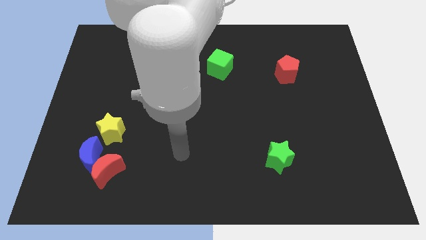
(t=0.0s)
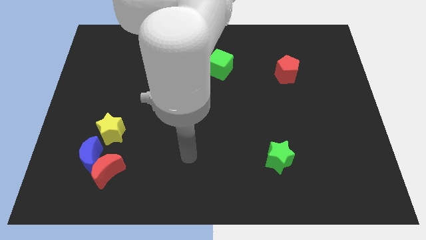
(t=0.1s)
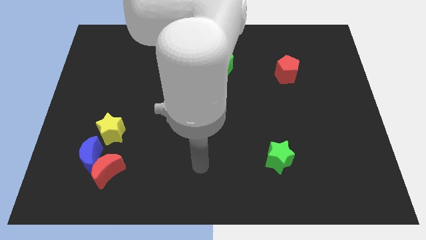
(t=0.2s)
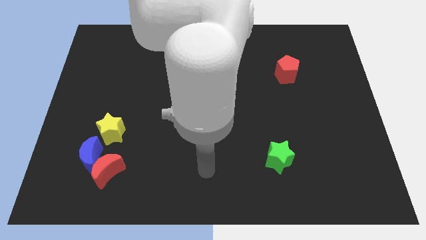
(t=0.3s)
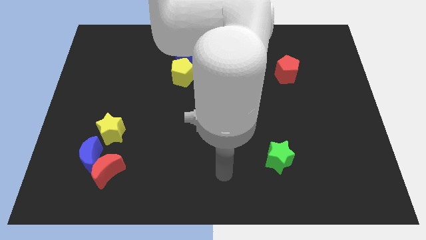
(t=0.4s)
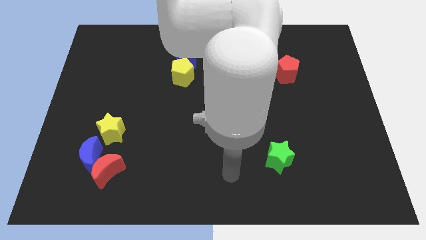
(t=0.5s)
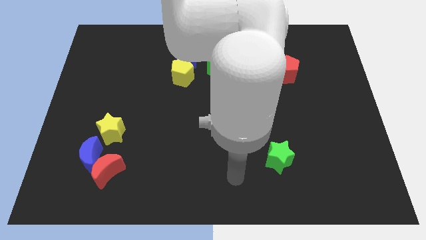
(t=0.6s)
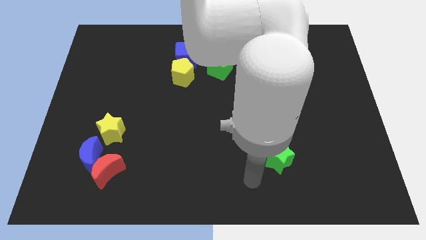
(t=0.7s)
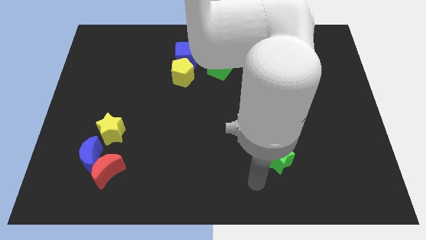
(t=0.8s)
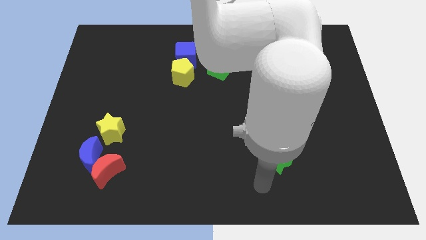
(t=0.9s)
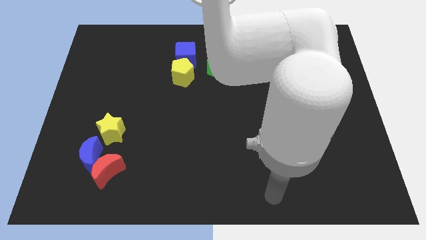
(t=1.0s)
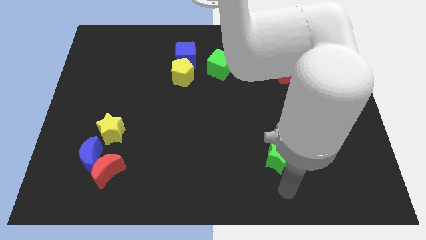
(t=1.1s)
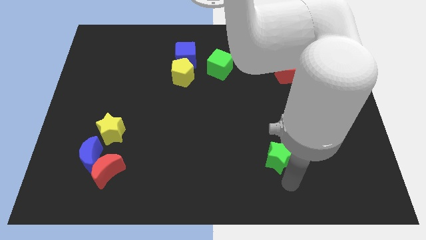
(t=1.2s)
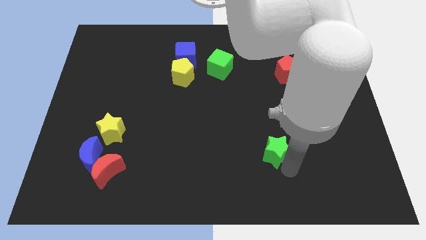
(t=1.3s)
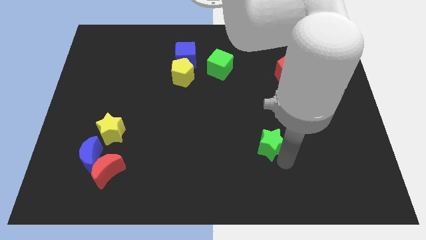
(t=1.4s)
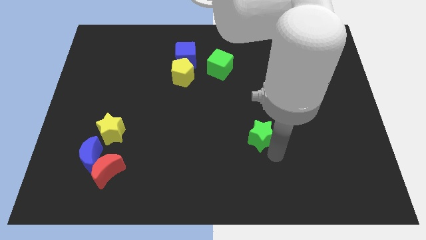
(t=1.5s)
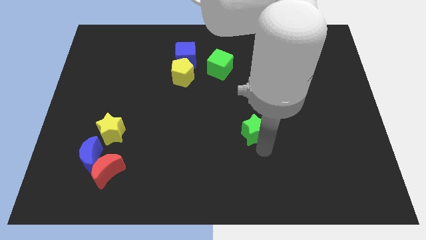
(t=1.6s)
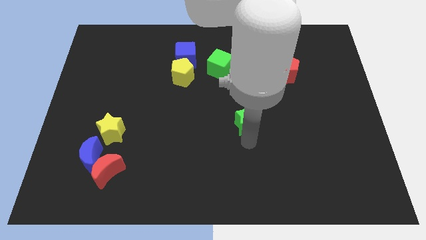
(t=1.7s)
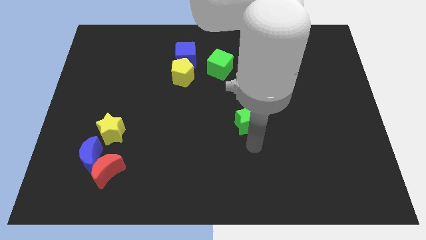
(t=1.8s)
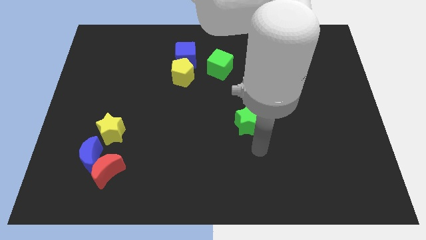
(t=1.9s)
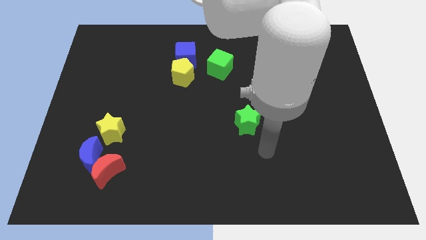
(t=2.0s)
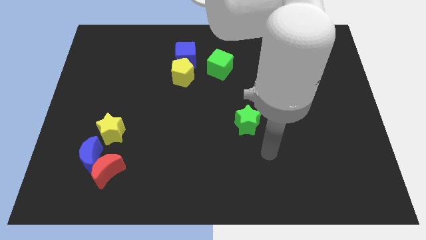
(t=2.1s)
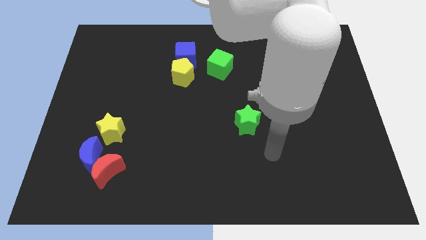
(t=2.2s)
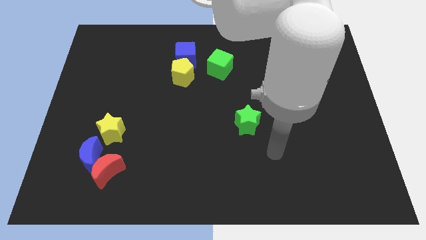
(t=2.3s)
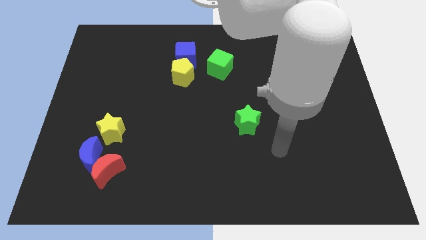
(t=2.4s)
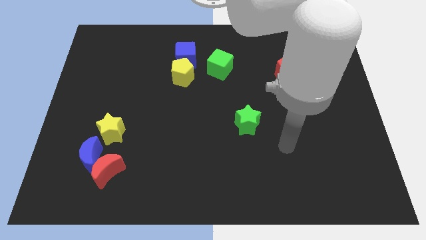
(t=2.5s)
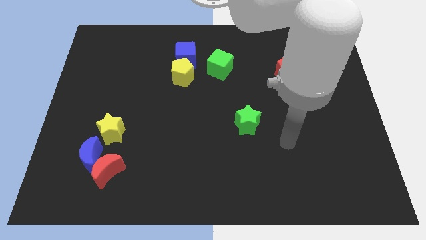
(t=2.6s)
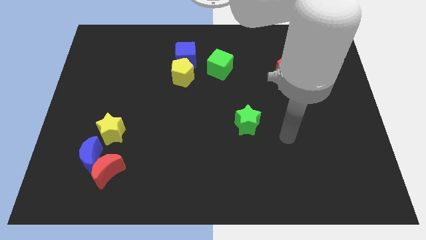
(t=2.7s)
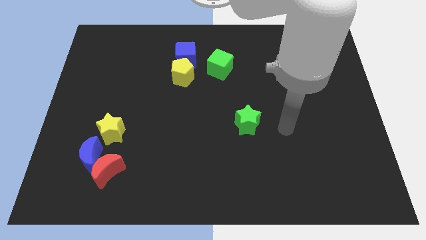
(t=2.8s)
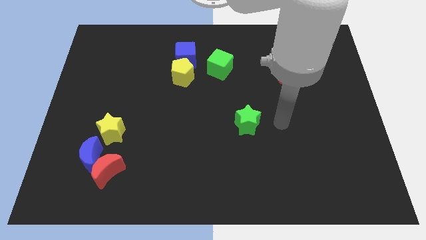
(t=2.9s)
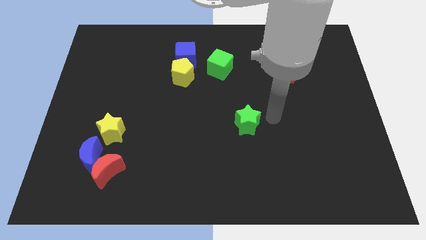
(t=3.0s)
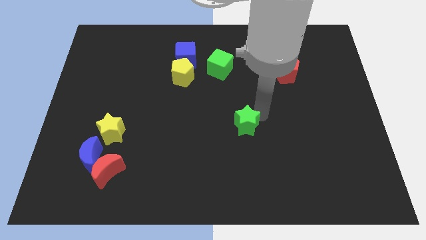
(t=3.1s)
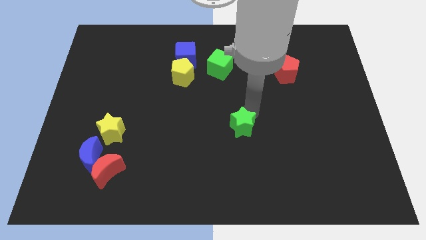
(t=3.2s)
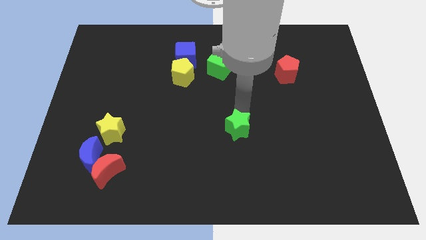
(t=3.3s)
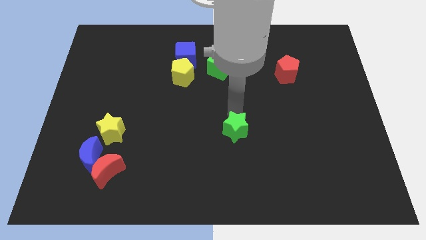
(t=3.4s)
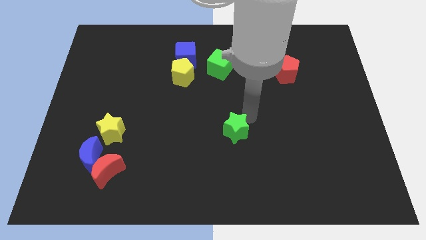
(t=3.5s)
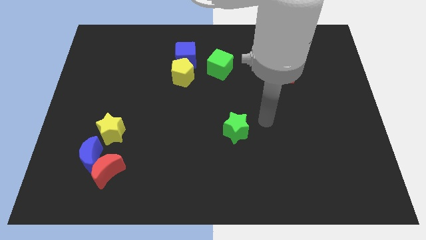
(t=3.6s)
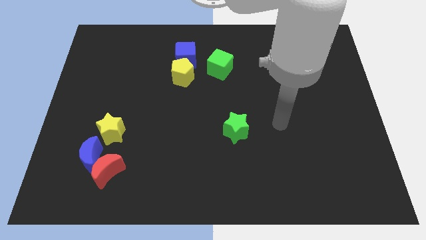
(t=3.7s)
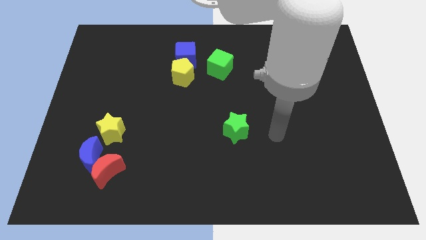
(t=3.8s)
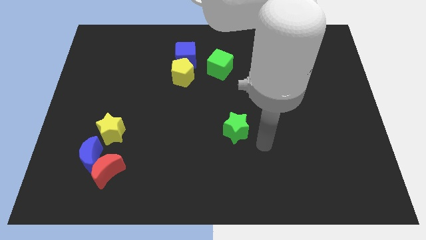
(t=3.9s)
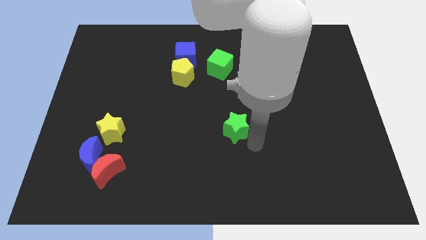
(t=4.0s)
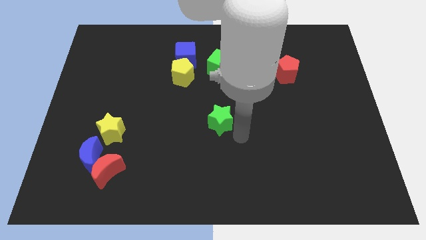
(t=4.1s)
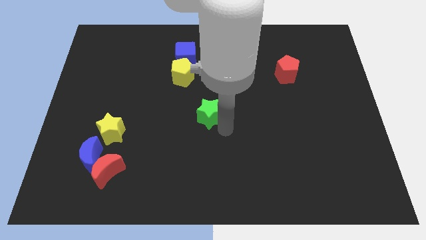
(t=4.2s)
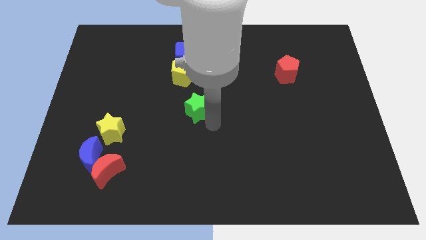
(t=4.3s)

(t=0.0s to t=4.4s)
move the green star to the center of the board

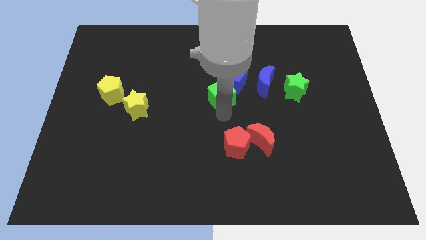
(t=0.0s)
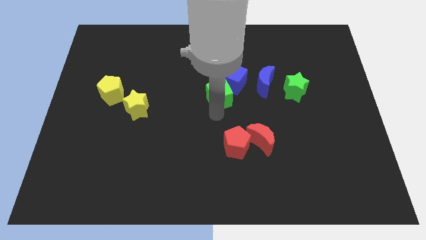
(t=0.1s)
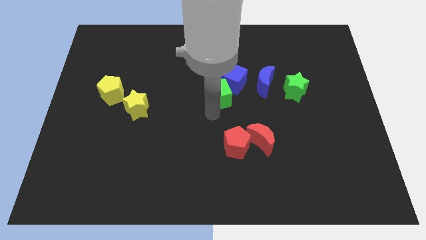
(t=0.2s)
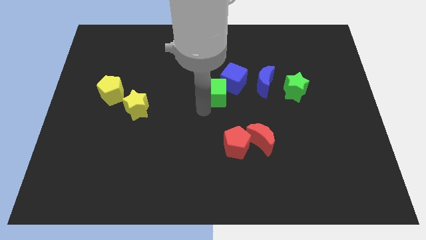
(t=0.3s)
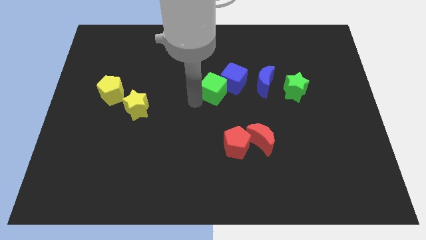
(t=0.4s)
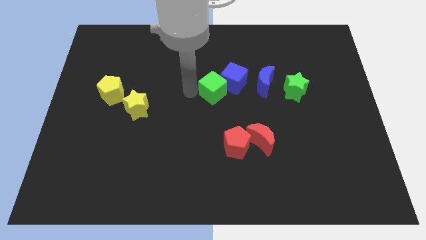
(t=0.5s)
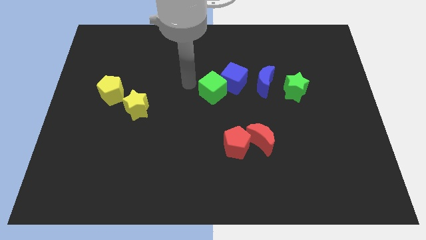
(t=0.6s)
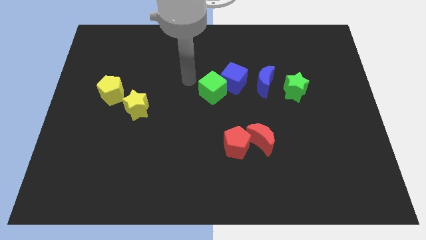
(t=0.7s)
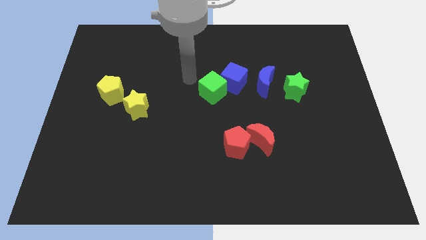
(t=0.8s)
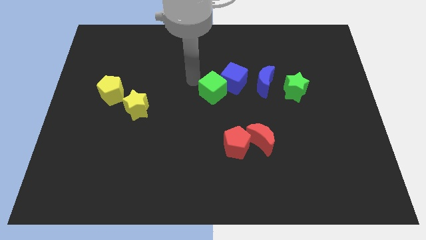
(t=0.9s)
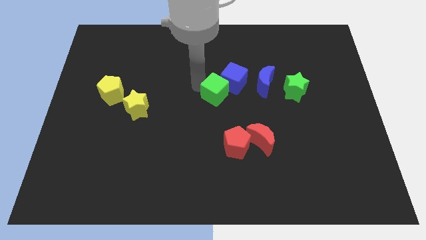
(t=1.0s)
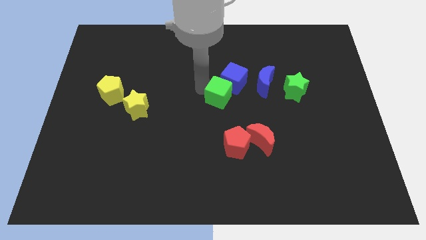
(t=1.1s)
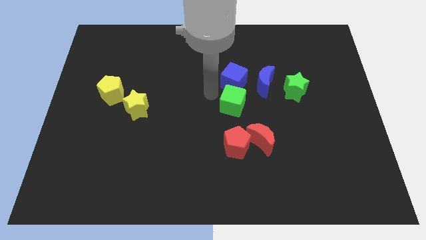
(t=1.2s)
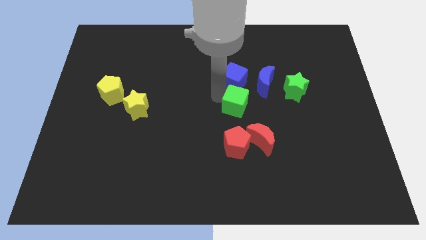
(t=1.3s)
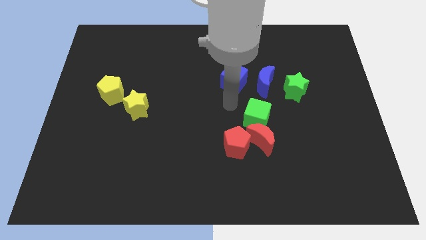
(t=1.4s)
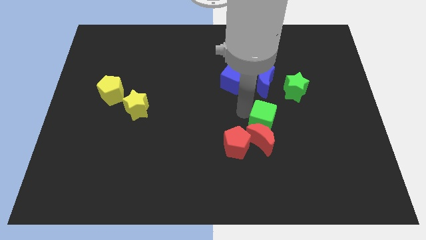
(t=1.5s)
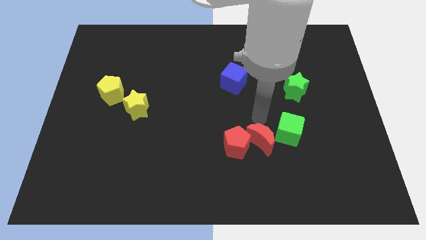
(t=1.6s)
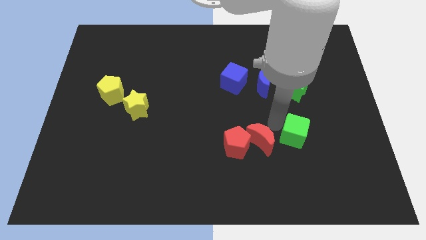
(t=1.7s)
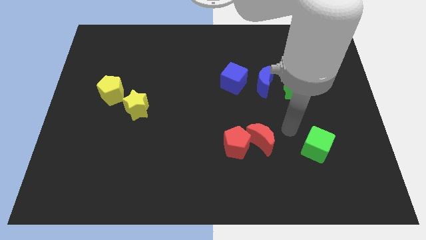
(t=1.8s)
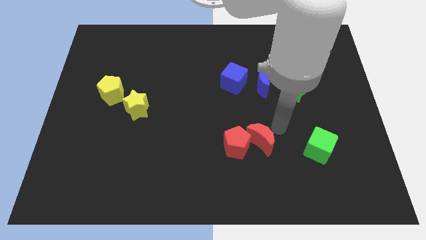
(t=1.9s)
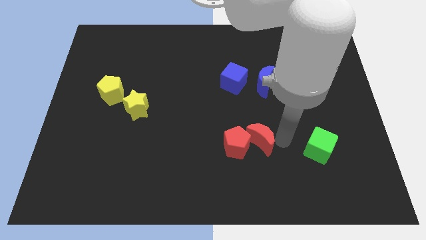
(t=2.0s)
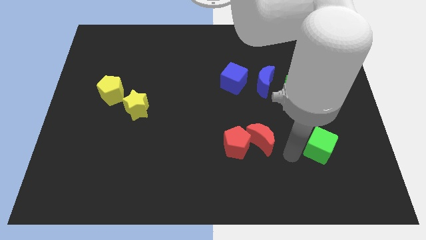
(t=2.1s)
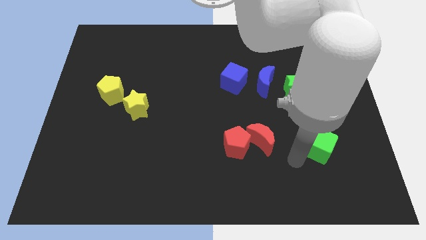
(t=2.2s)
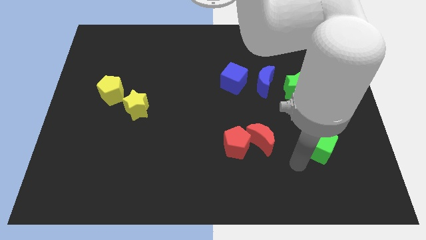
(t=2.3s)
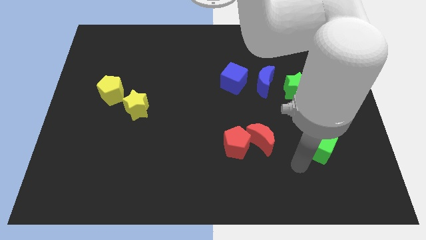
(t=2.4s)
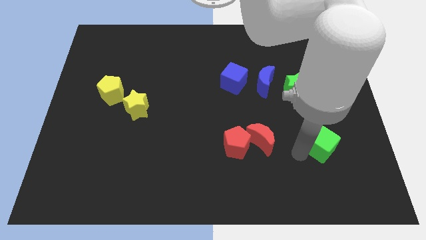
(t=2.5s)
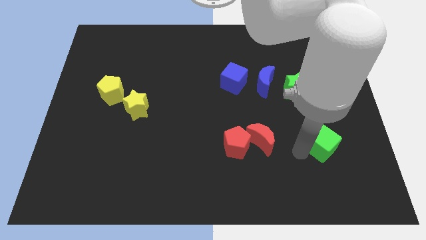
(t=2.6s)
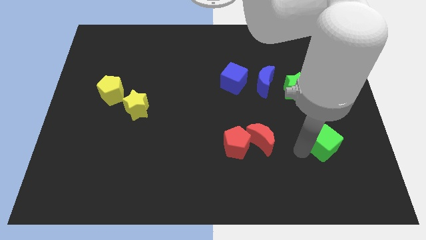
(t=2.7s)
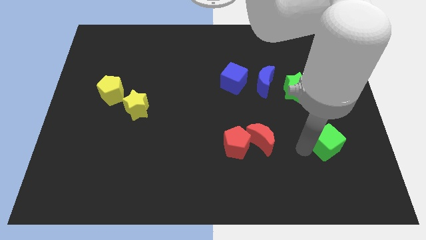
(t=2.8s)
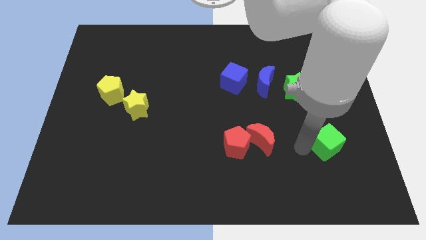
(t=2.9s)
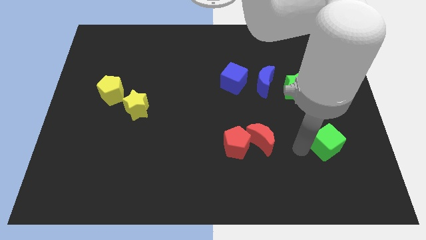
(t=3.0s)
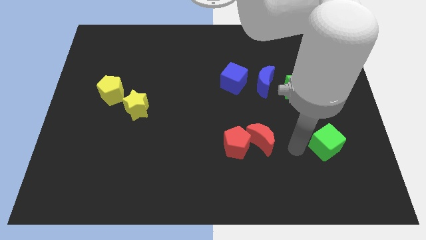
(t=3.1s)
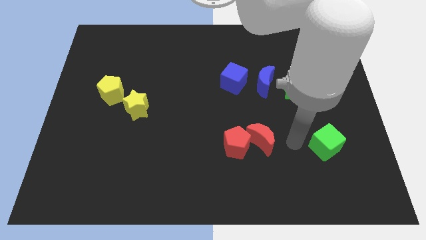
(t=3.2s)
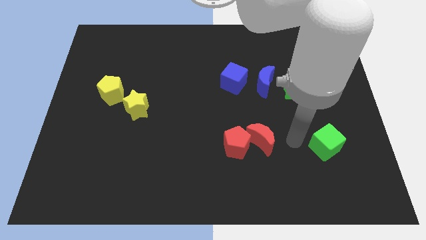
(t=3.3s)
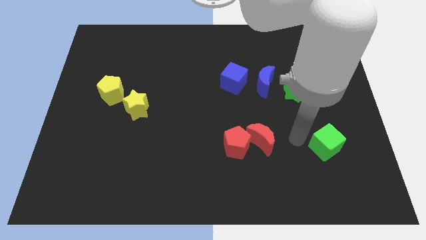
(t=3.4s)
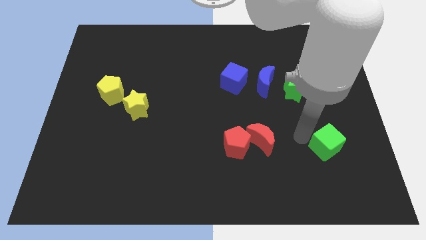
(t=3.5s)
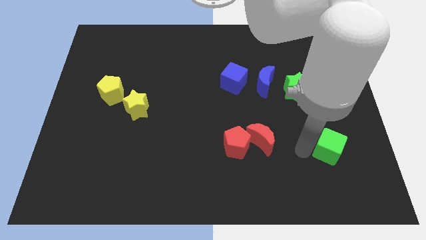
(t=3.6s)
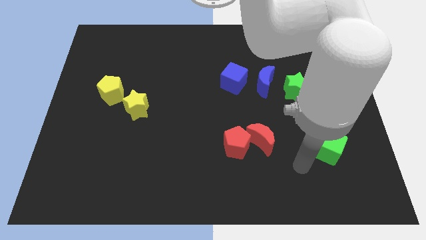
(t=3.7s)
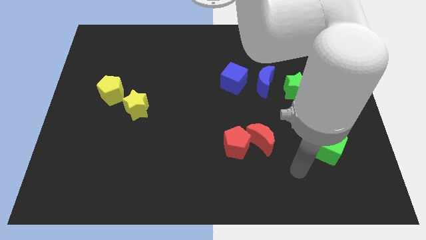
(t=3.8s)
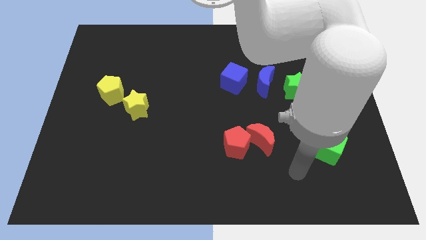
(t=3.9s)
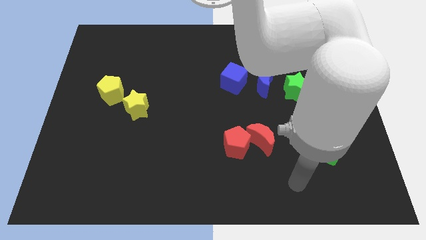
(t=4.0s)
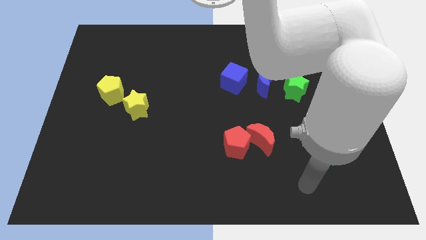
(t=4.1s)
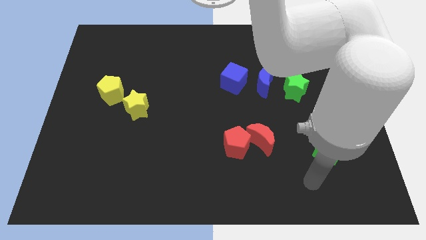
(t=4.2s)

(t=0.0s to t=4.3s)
place the green cube horizontally to the right side of the red crescent

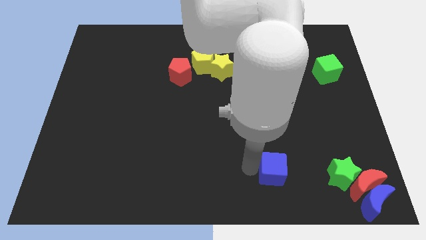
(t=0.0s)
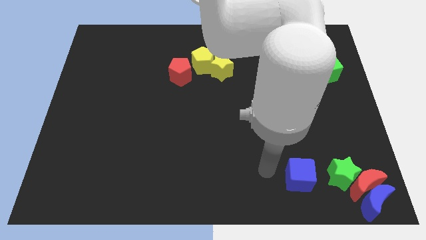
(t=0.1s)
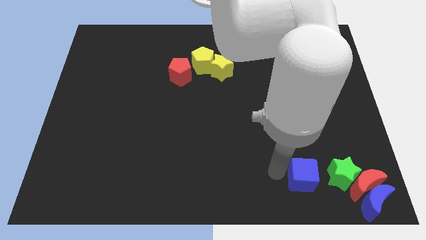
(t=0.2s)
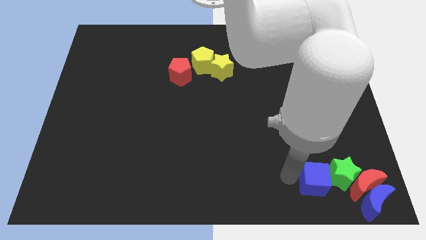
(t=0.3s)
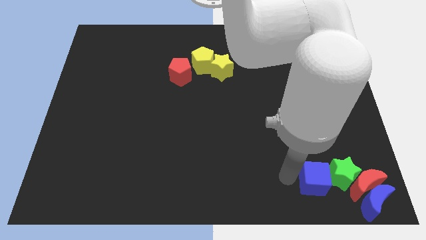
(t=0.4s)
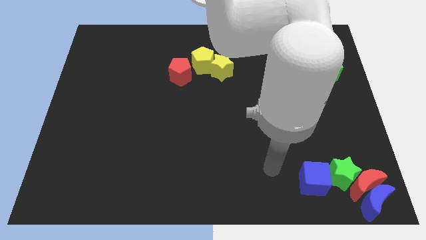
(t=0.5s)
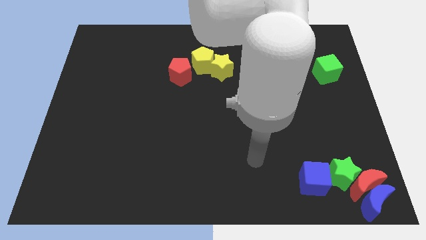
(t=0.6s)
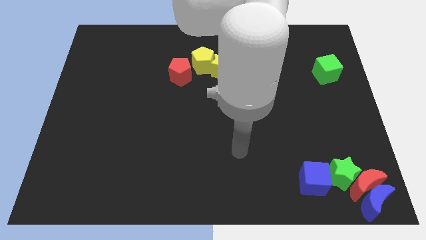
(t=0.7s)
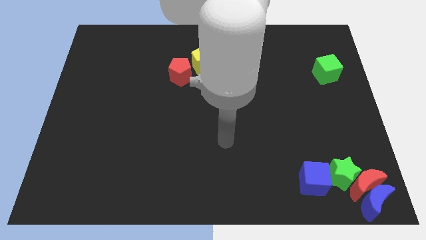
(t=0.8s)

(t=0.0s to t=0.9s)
move the blue cube close to the green star
